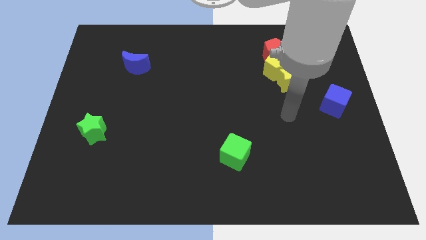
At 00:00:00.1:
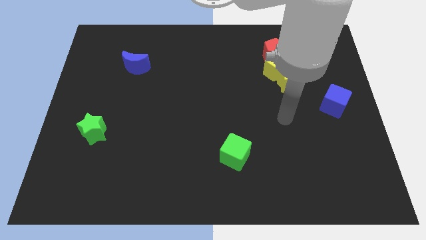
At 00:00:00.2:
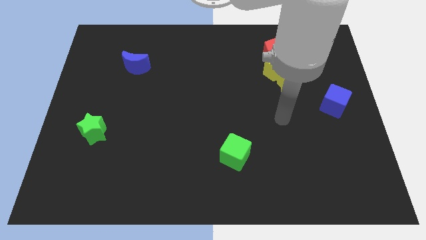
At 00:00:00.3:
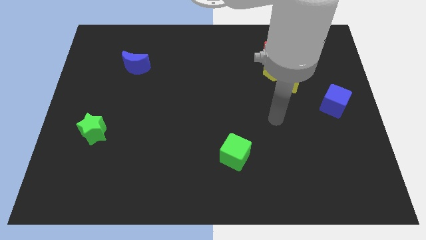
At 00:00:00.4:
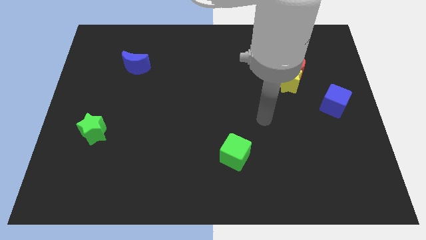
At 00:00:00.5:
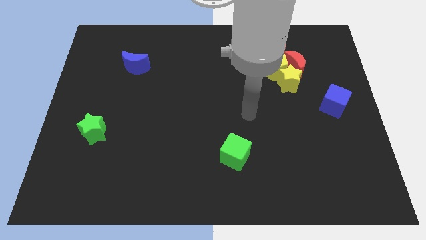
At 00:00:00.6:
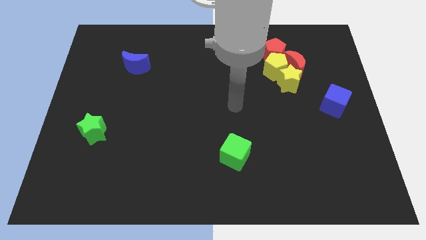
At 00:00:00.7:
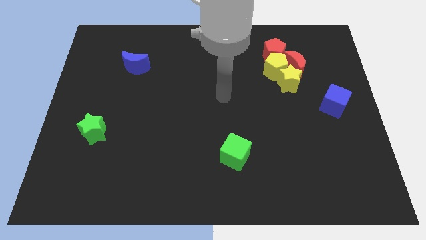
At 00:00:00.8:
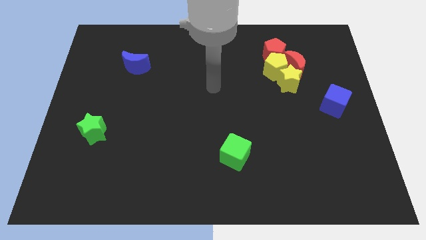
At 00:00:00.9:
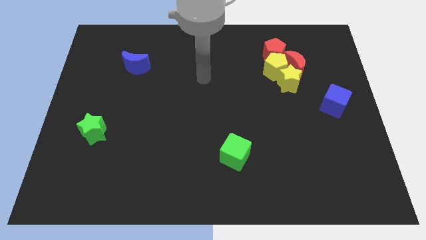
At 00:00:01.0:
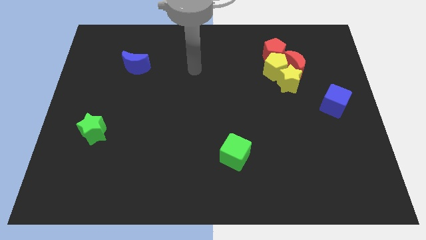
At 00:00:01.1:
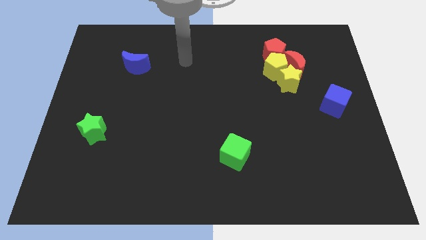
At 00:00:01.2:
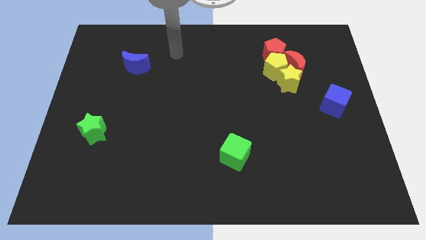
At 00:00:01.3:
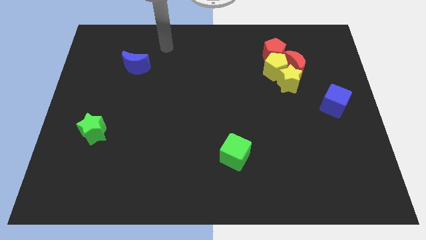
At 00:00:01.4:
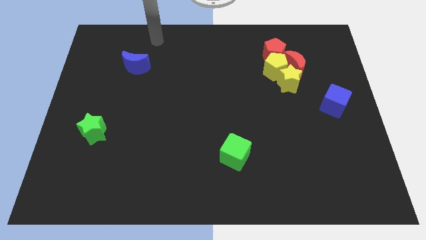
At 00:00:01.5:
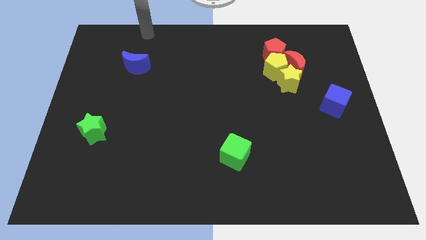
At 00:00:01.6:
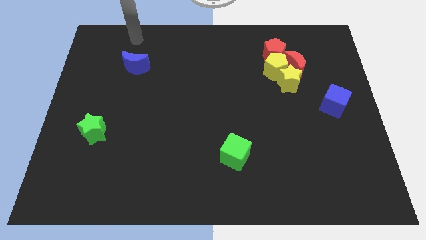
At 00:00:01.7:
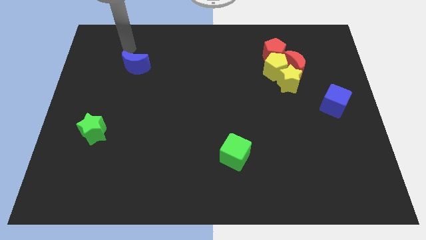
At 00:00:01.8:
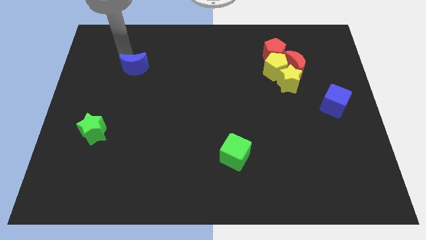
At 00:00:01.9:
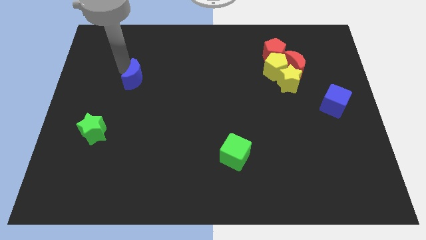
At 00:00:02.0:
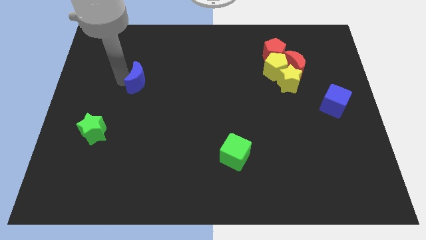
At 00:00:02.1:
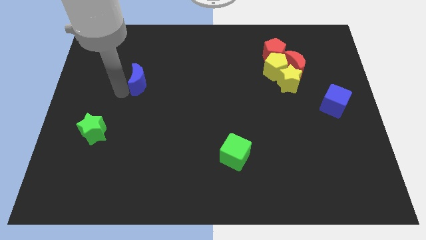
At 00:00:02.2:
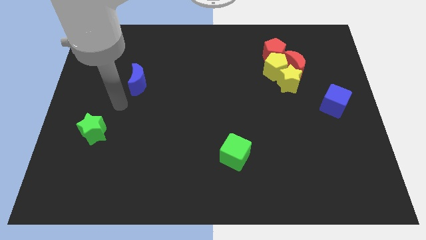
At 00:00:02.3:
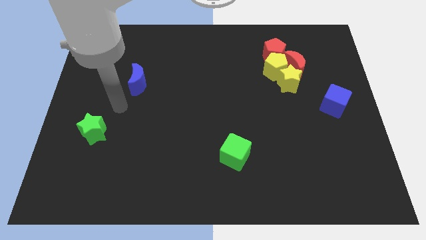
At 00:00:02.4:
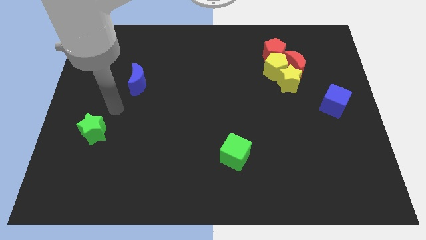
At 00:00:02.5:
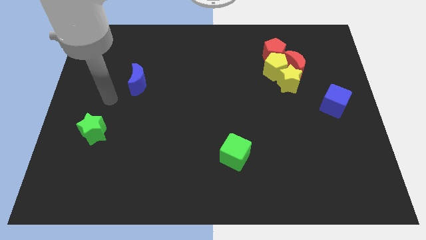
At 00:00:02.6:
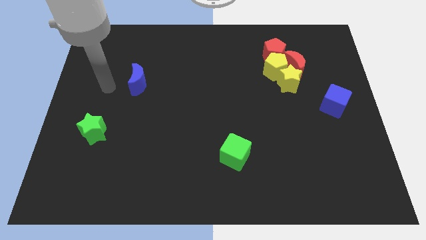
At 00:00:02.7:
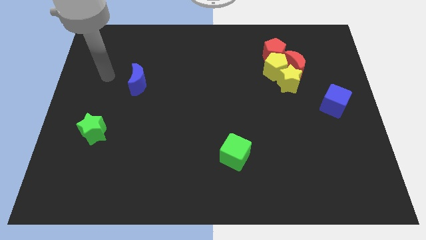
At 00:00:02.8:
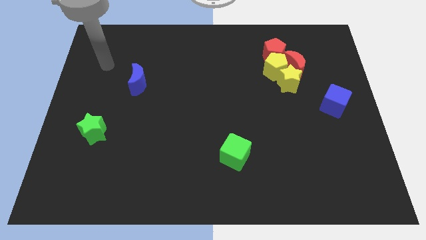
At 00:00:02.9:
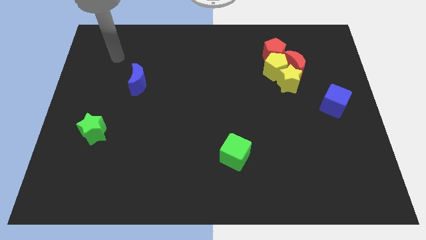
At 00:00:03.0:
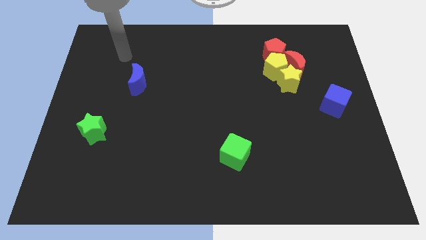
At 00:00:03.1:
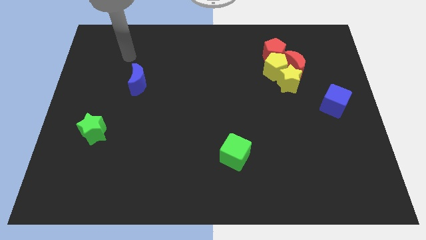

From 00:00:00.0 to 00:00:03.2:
move the blue moon towards the center side

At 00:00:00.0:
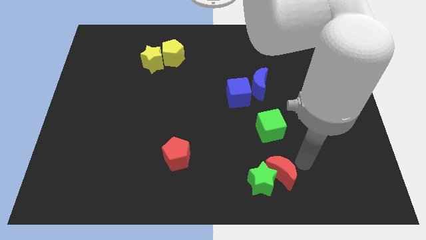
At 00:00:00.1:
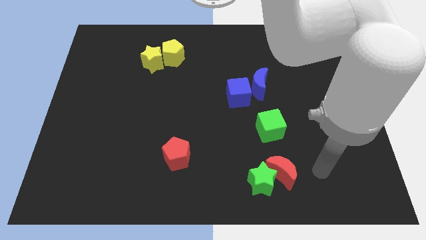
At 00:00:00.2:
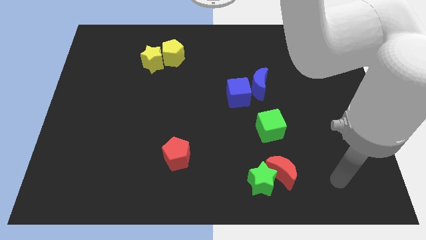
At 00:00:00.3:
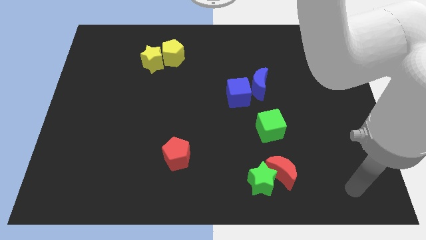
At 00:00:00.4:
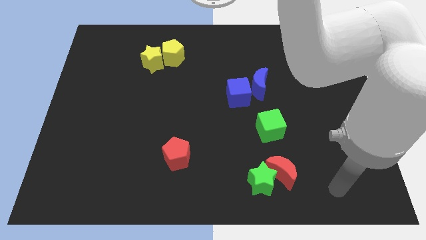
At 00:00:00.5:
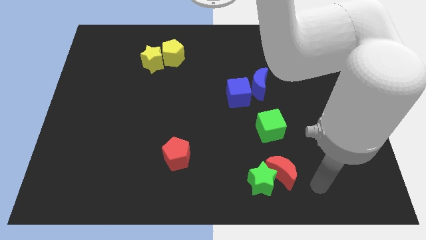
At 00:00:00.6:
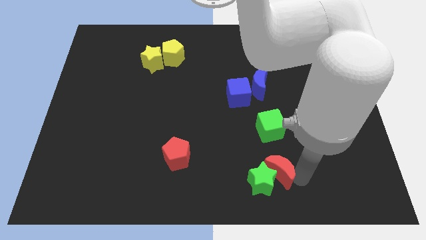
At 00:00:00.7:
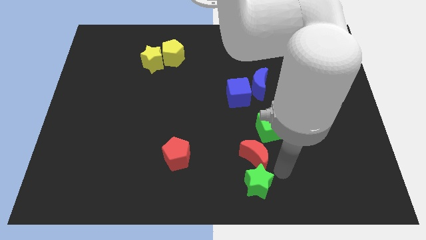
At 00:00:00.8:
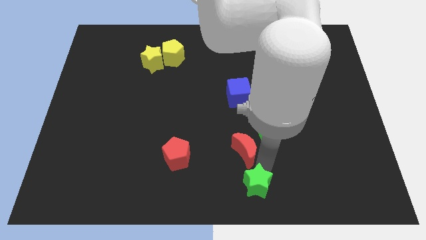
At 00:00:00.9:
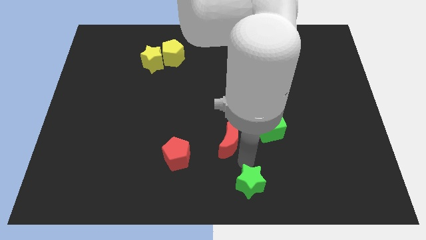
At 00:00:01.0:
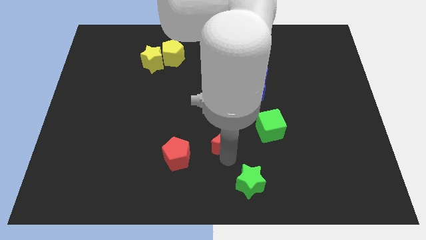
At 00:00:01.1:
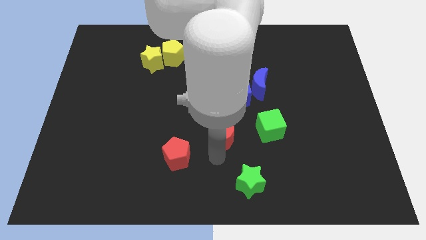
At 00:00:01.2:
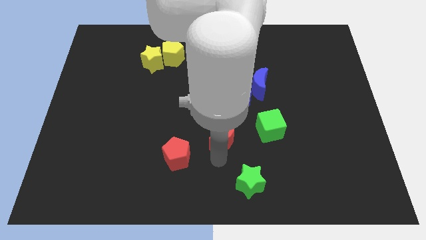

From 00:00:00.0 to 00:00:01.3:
place the red crescent in between the red pentagon and the green cube

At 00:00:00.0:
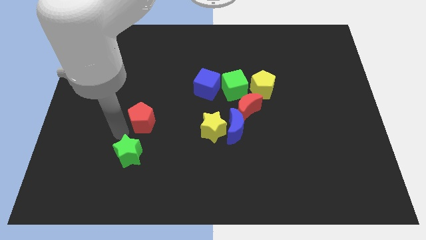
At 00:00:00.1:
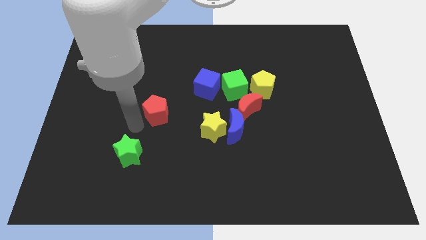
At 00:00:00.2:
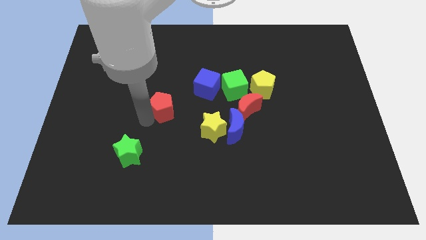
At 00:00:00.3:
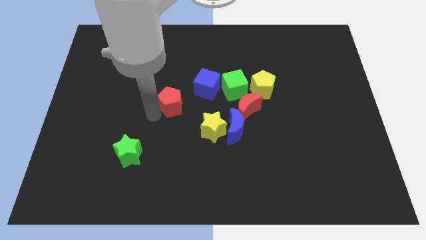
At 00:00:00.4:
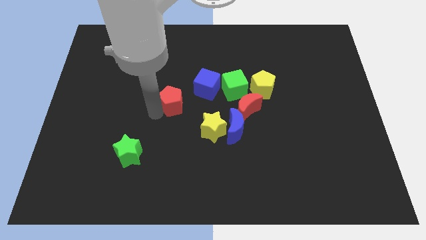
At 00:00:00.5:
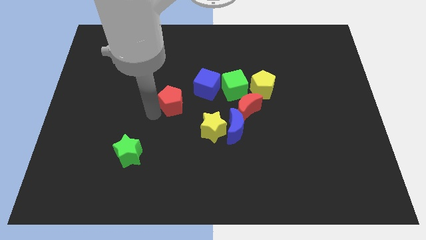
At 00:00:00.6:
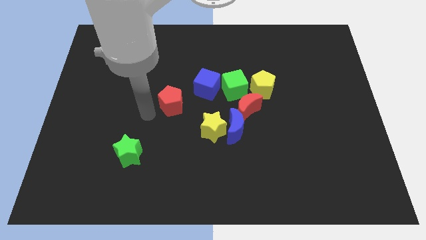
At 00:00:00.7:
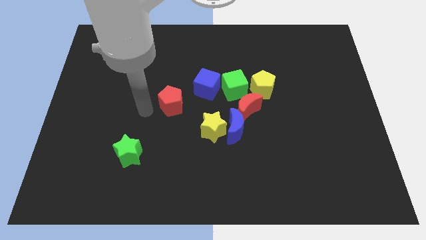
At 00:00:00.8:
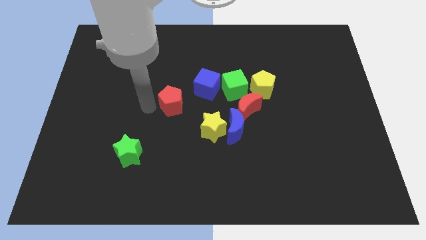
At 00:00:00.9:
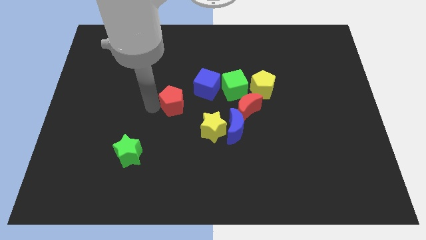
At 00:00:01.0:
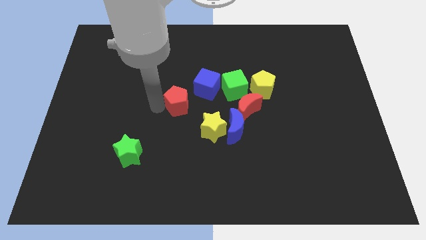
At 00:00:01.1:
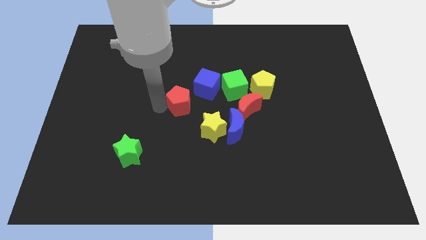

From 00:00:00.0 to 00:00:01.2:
push the red pentagon towards blue cube

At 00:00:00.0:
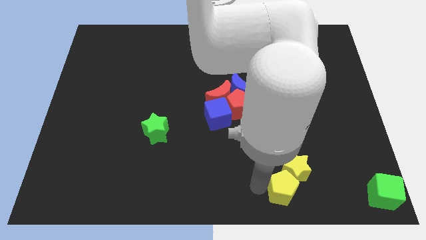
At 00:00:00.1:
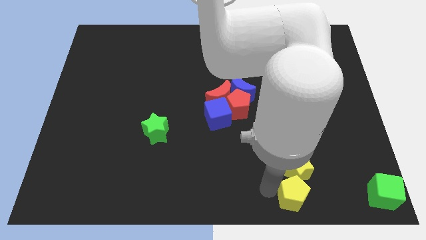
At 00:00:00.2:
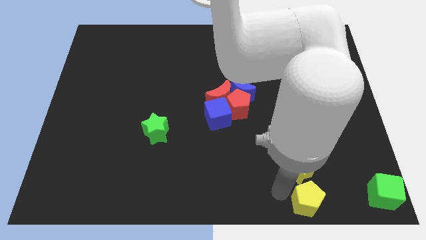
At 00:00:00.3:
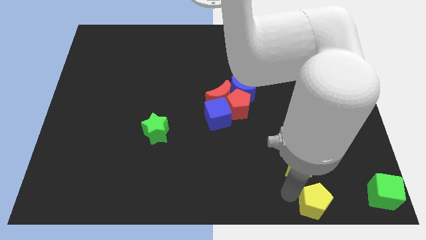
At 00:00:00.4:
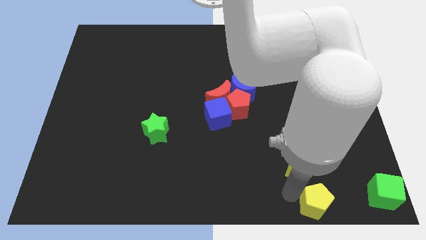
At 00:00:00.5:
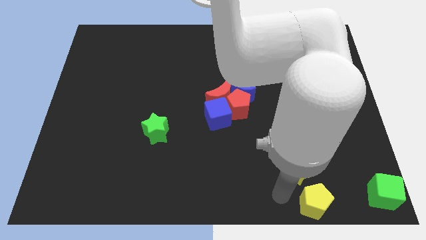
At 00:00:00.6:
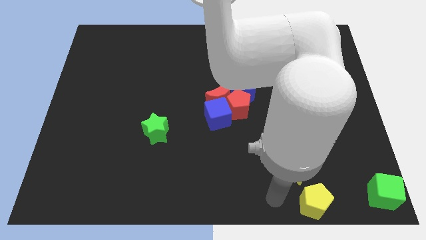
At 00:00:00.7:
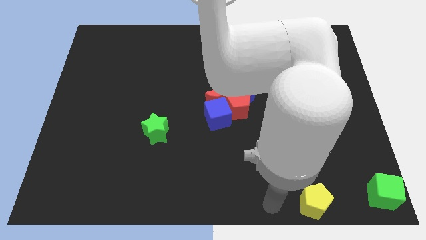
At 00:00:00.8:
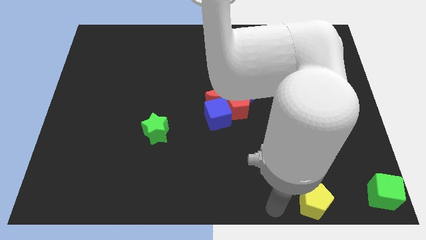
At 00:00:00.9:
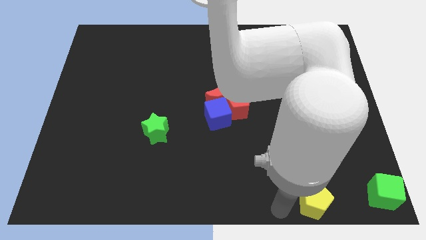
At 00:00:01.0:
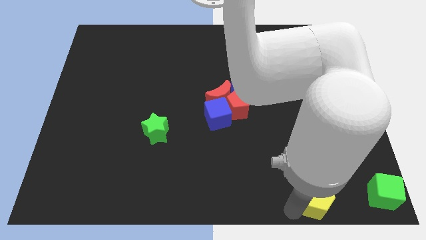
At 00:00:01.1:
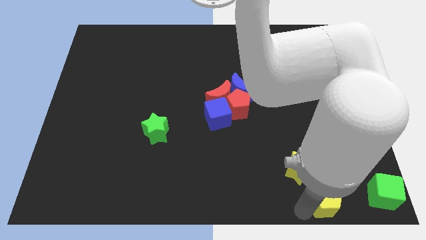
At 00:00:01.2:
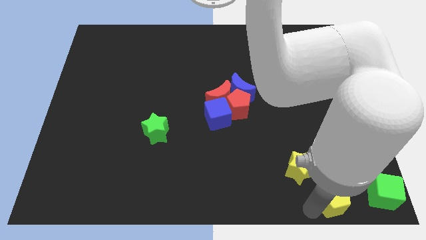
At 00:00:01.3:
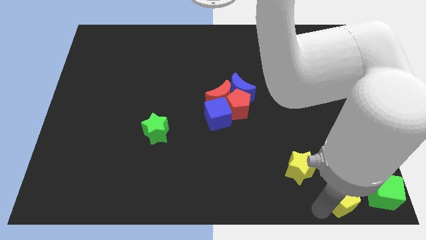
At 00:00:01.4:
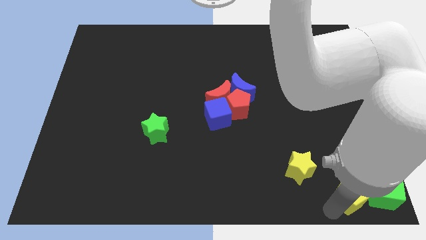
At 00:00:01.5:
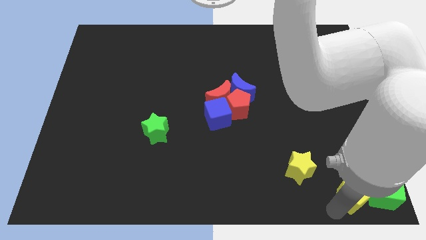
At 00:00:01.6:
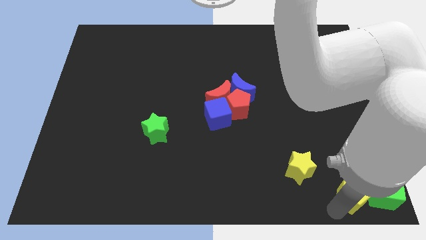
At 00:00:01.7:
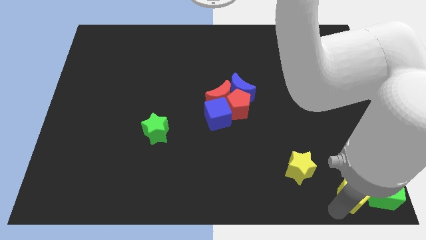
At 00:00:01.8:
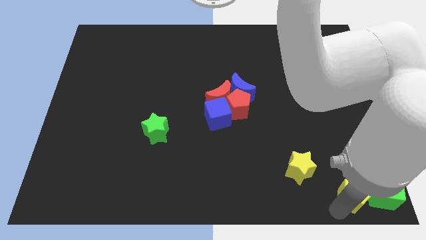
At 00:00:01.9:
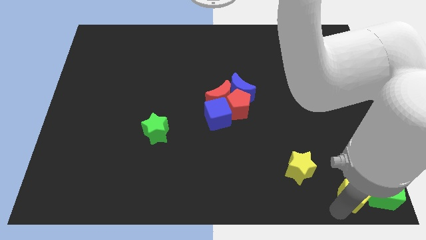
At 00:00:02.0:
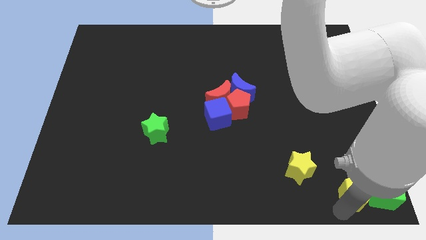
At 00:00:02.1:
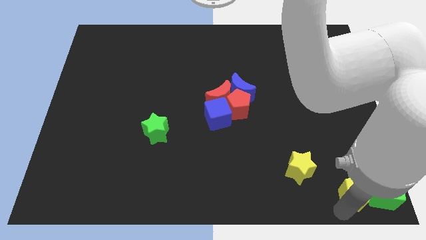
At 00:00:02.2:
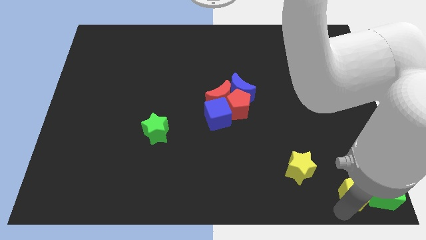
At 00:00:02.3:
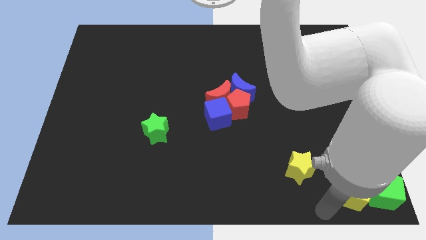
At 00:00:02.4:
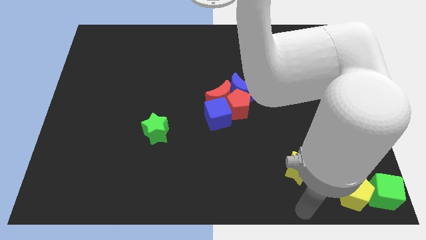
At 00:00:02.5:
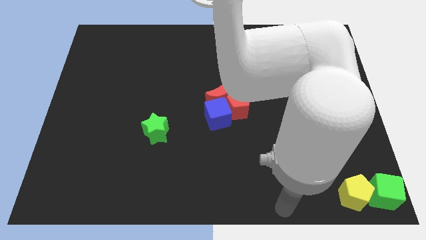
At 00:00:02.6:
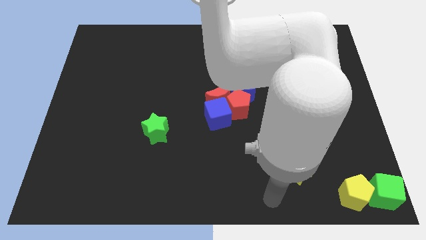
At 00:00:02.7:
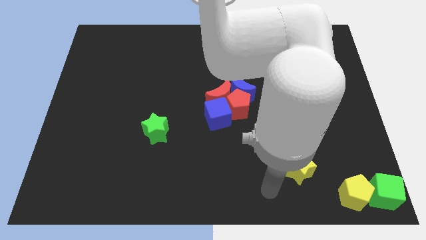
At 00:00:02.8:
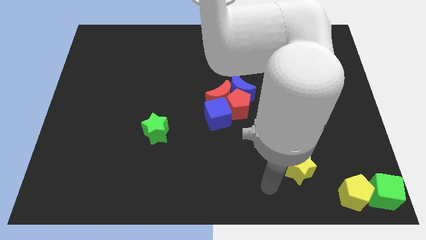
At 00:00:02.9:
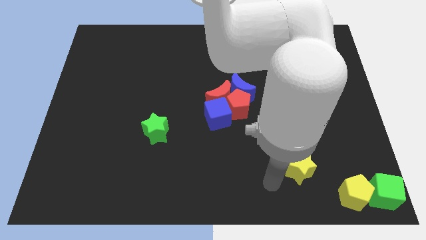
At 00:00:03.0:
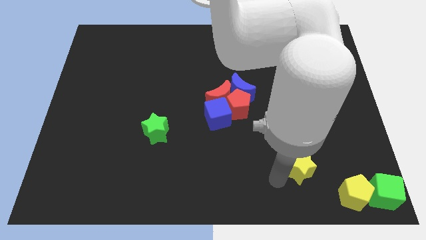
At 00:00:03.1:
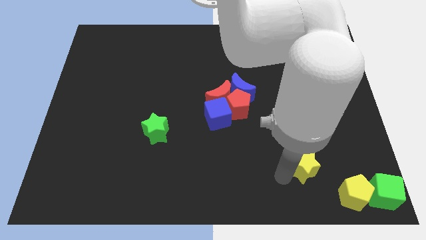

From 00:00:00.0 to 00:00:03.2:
put the yellow pentagon on the left side of the green cube
